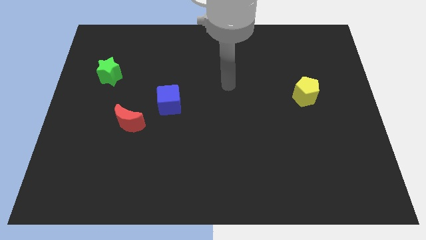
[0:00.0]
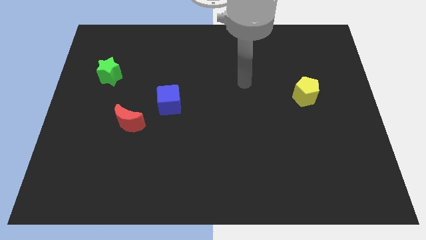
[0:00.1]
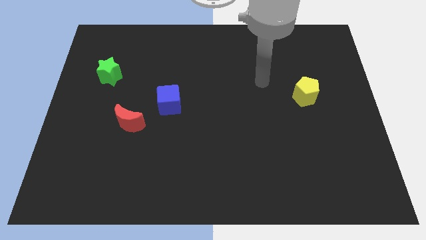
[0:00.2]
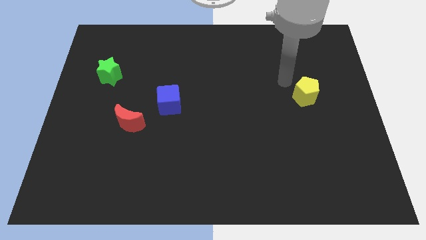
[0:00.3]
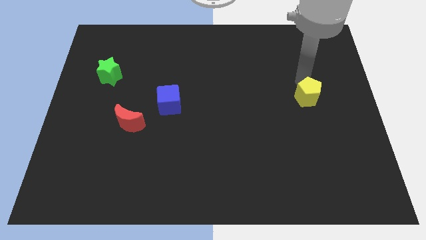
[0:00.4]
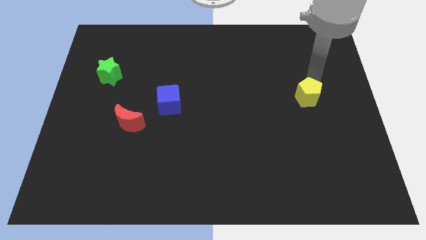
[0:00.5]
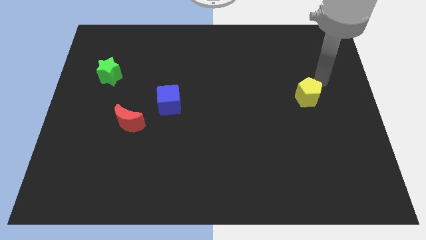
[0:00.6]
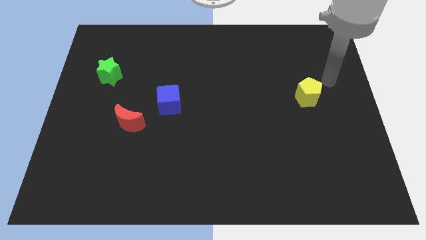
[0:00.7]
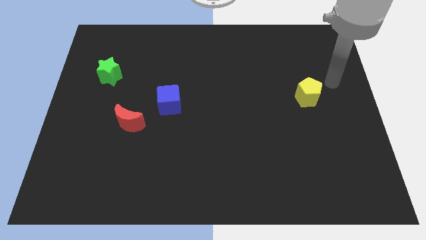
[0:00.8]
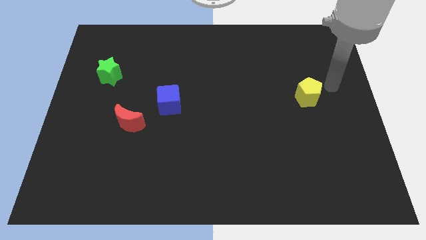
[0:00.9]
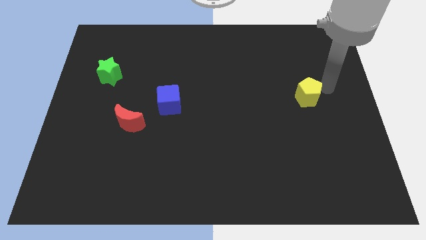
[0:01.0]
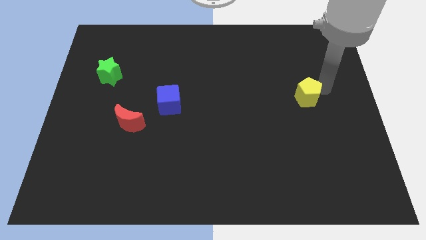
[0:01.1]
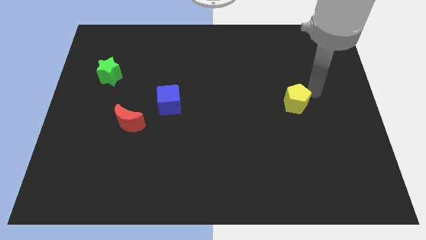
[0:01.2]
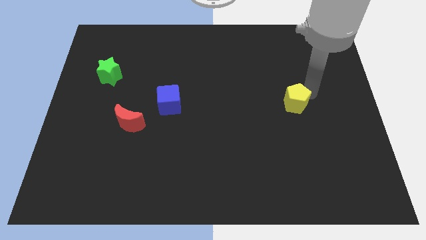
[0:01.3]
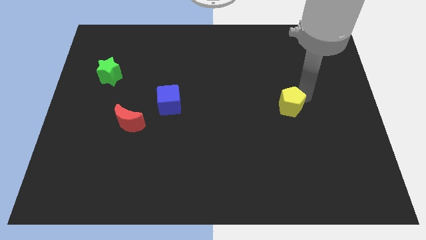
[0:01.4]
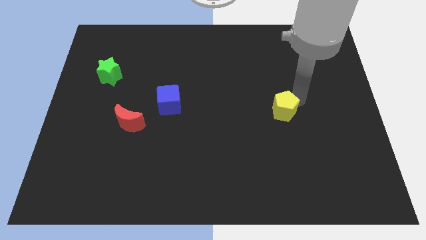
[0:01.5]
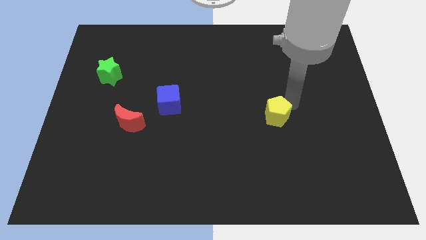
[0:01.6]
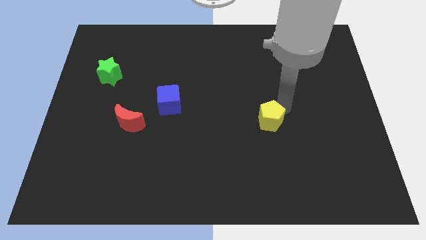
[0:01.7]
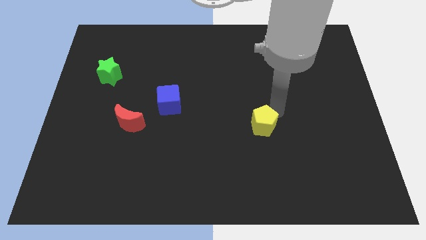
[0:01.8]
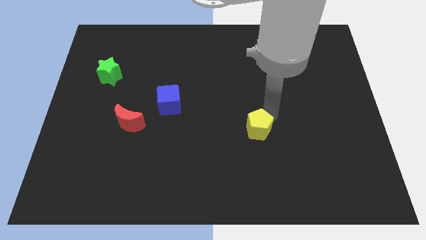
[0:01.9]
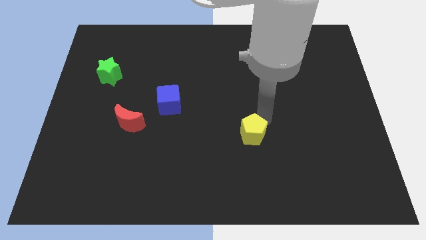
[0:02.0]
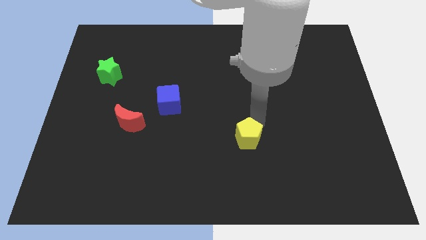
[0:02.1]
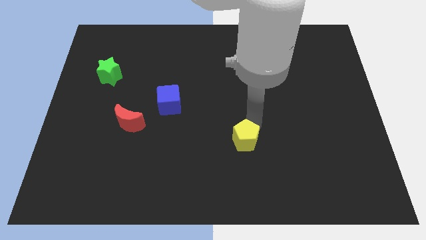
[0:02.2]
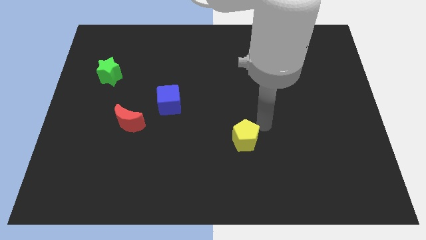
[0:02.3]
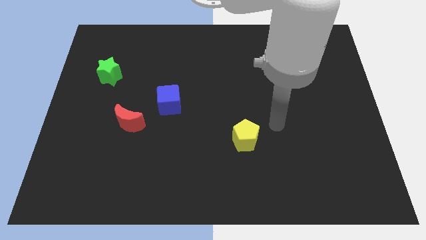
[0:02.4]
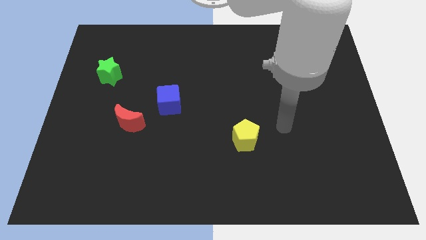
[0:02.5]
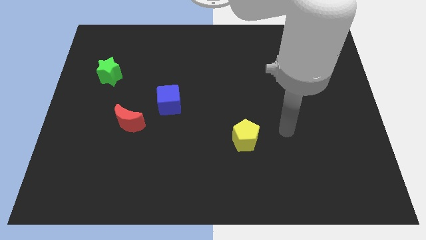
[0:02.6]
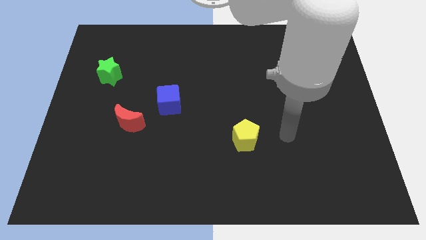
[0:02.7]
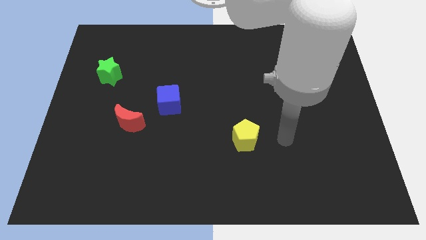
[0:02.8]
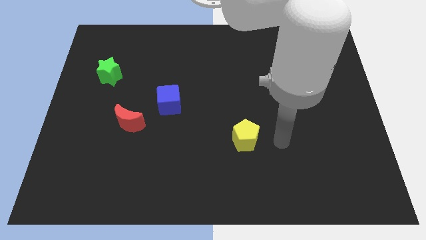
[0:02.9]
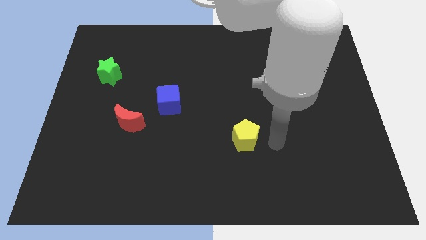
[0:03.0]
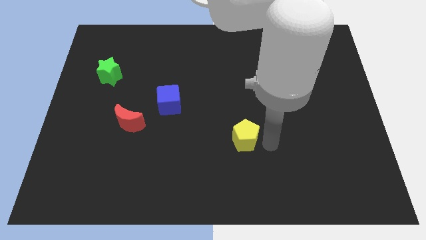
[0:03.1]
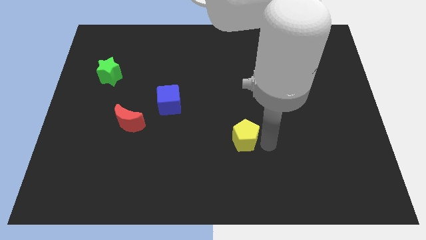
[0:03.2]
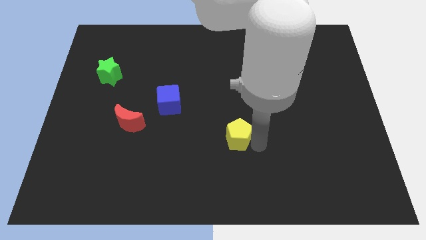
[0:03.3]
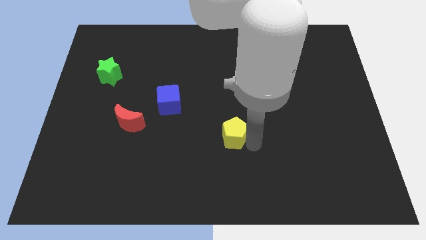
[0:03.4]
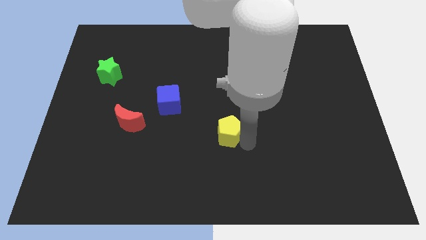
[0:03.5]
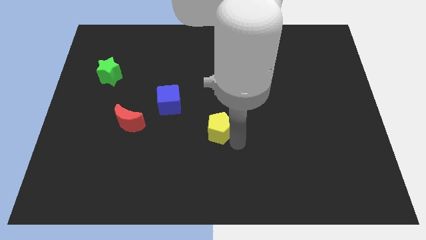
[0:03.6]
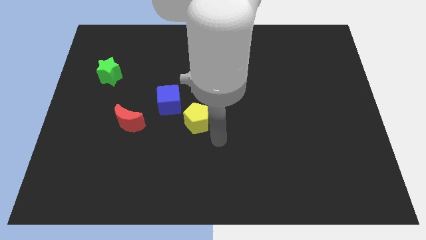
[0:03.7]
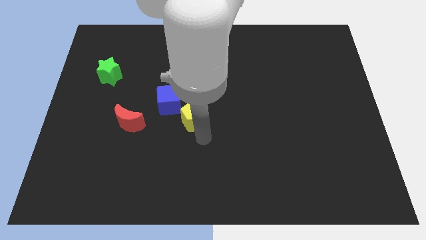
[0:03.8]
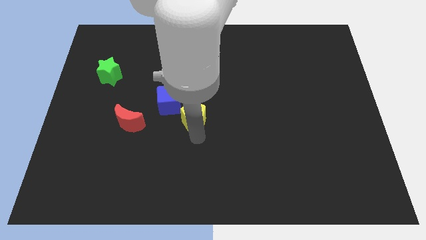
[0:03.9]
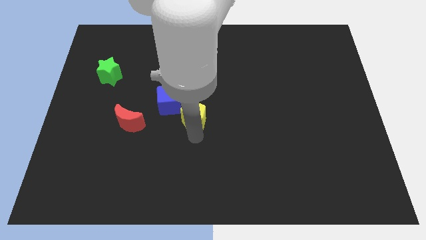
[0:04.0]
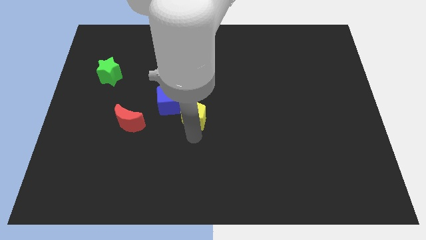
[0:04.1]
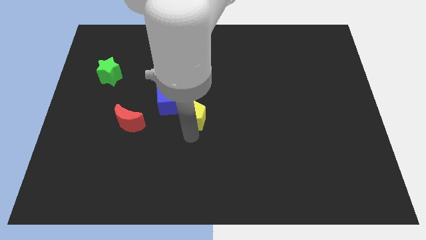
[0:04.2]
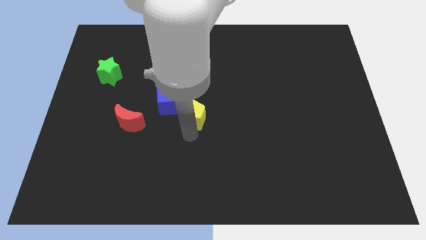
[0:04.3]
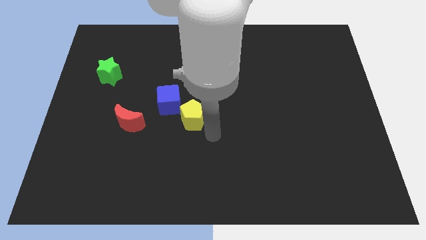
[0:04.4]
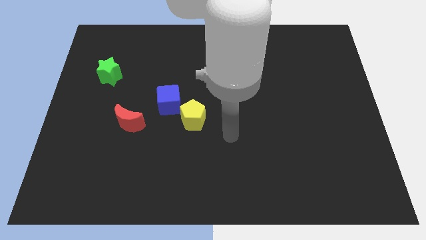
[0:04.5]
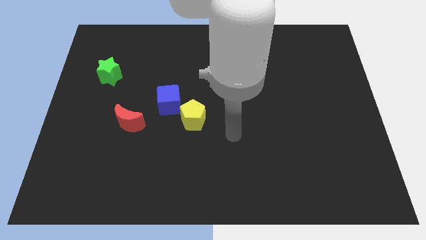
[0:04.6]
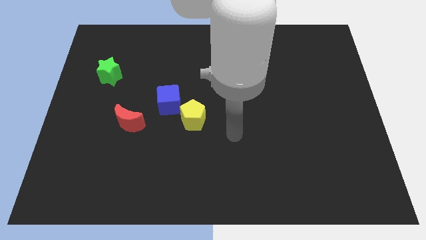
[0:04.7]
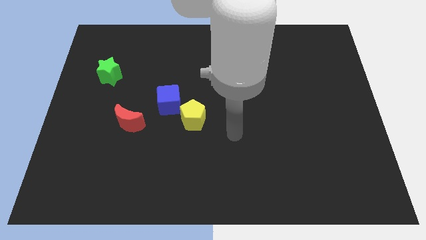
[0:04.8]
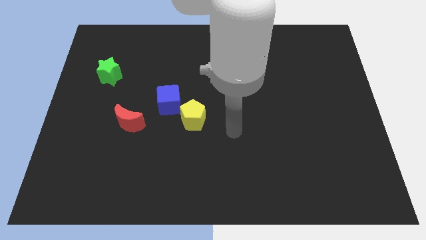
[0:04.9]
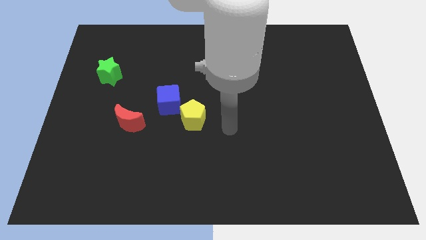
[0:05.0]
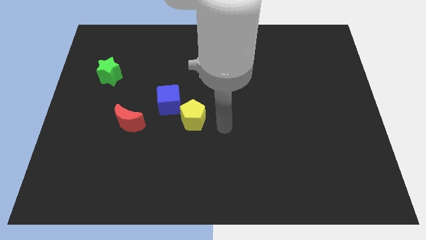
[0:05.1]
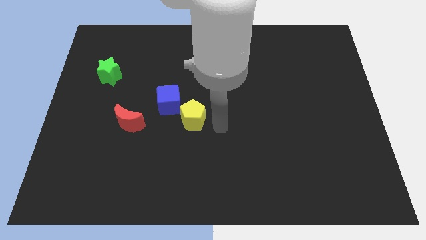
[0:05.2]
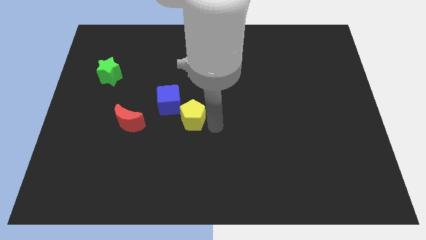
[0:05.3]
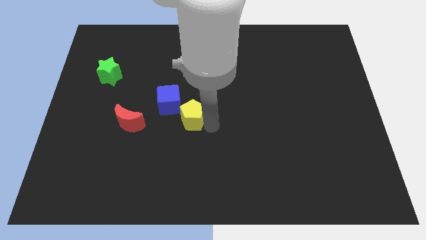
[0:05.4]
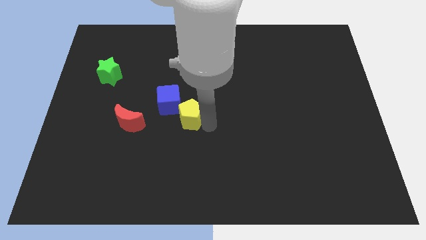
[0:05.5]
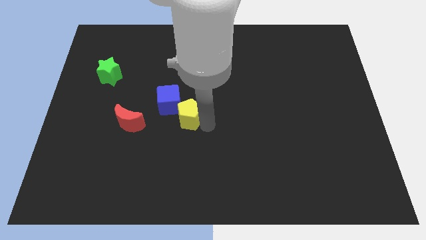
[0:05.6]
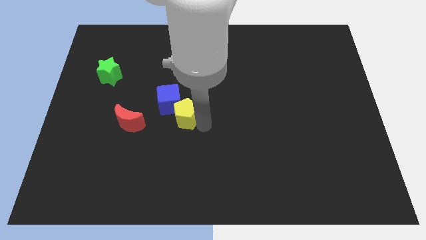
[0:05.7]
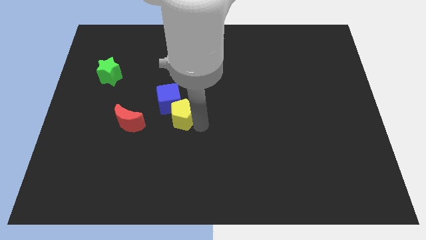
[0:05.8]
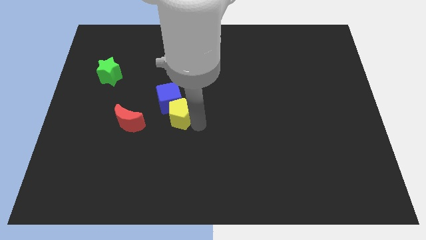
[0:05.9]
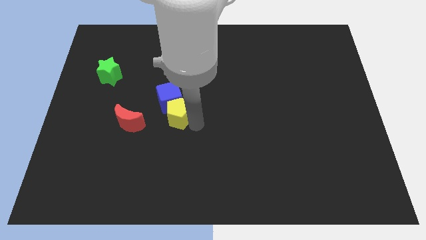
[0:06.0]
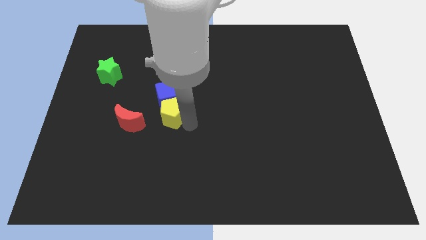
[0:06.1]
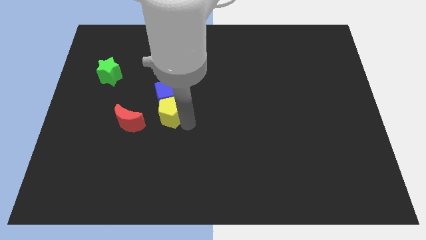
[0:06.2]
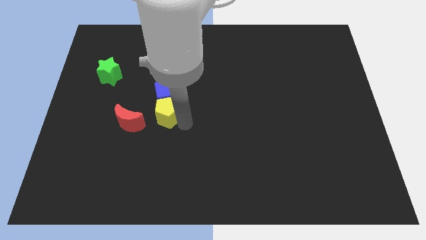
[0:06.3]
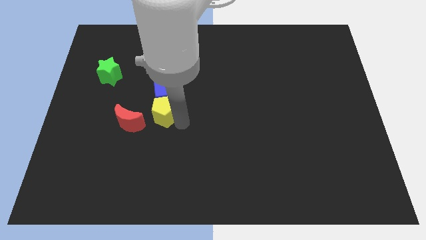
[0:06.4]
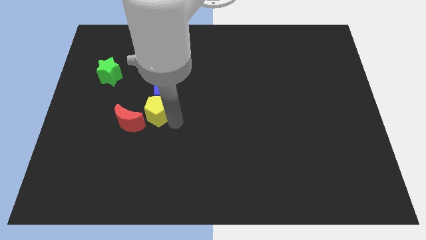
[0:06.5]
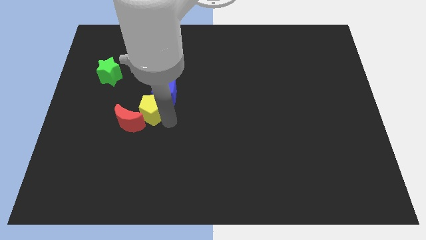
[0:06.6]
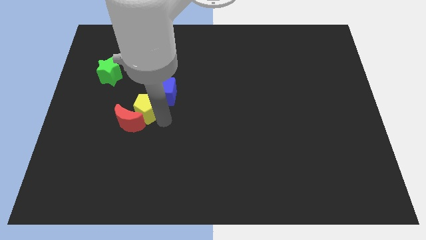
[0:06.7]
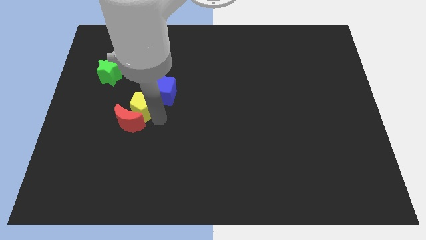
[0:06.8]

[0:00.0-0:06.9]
put the yellow pentagon towards the moon

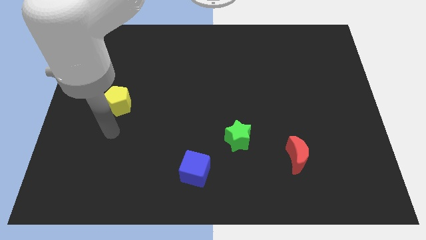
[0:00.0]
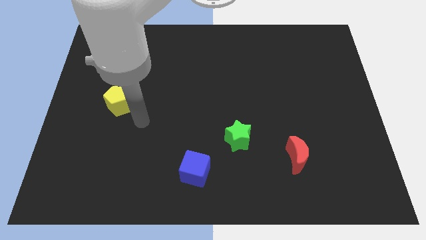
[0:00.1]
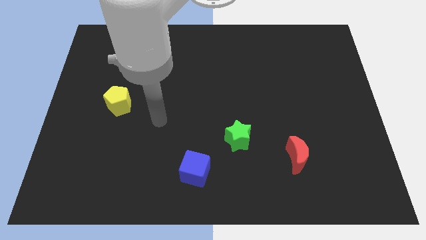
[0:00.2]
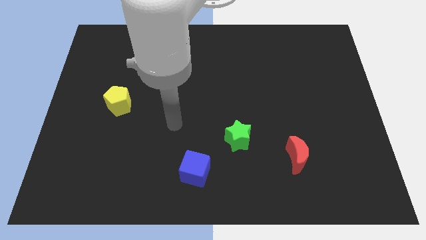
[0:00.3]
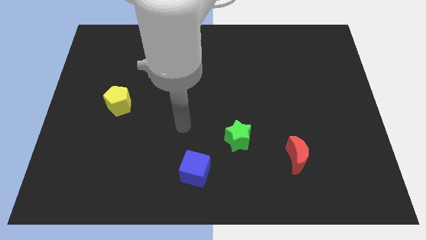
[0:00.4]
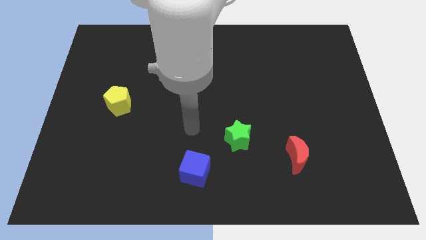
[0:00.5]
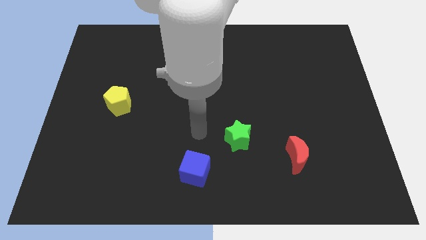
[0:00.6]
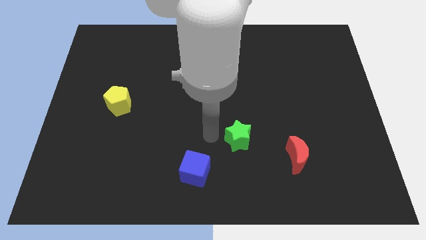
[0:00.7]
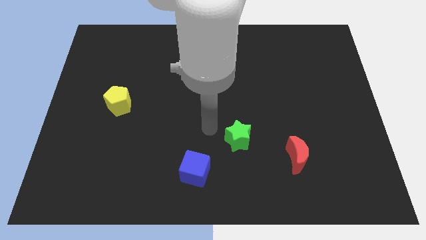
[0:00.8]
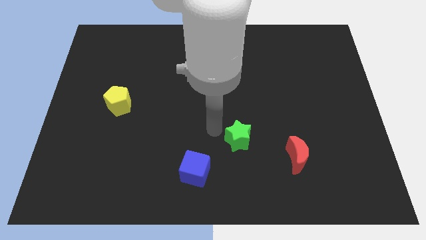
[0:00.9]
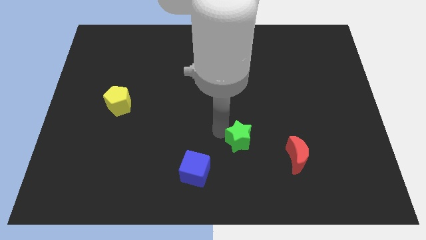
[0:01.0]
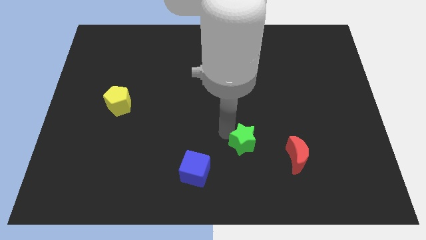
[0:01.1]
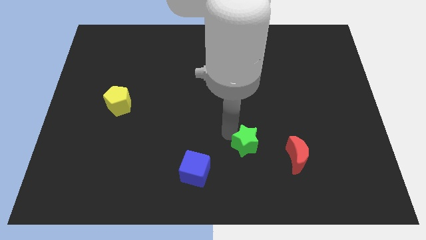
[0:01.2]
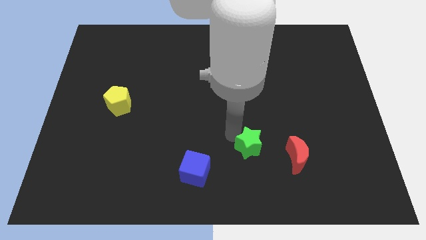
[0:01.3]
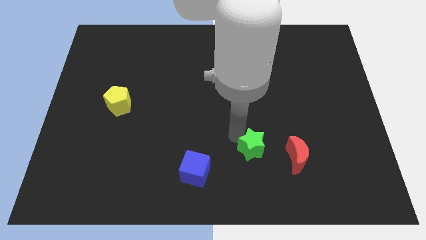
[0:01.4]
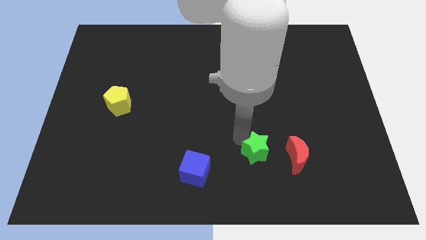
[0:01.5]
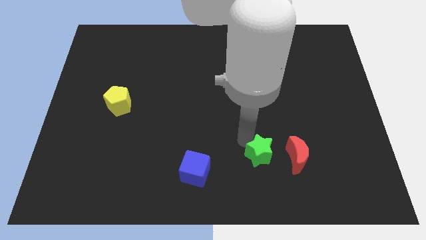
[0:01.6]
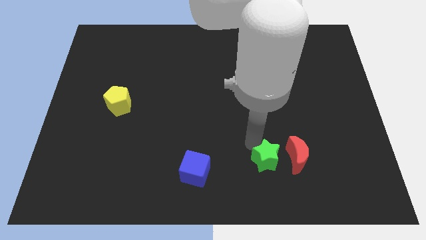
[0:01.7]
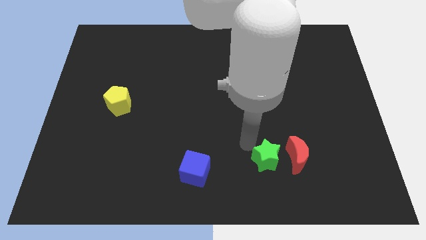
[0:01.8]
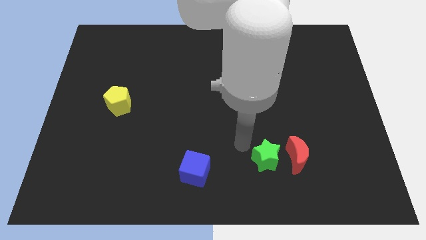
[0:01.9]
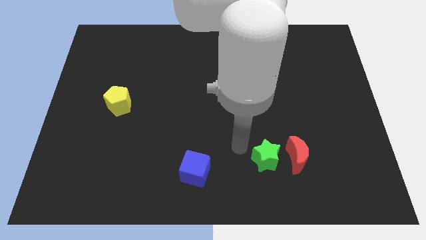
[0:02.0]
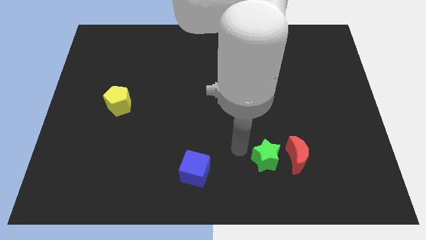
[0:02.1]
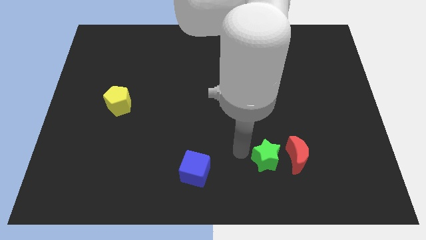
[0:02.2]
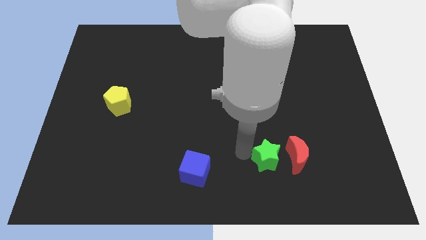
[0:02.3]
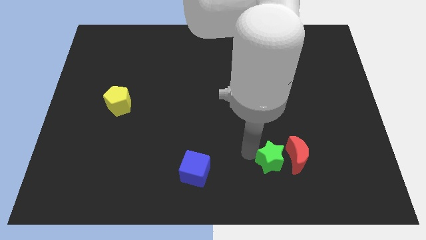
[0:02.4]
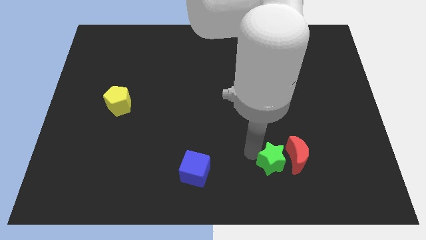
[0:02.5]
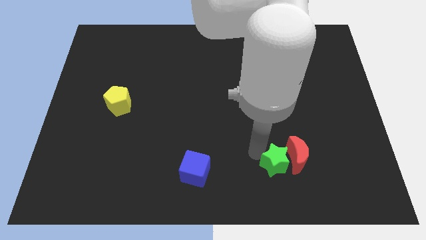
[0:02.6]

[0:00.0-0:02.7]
move the green block to the moon
